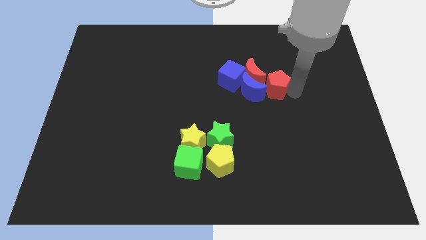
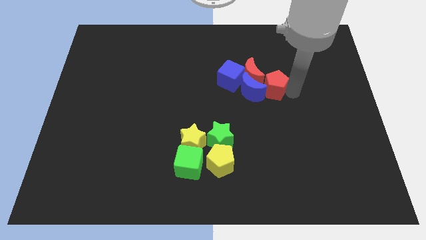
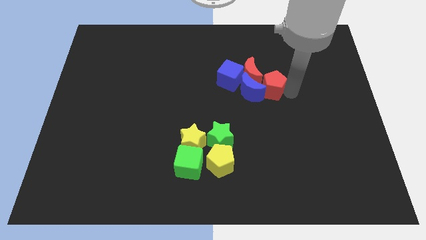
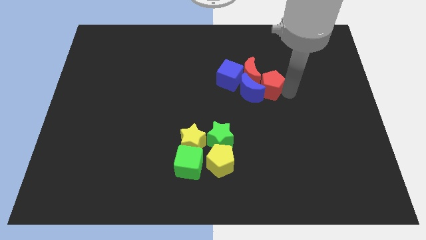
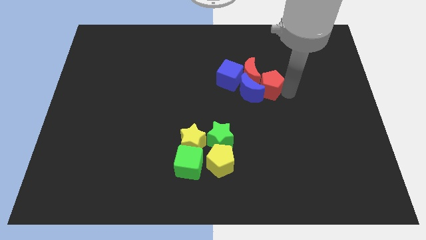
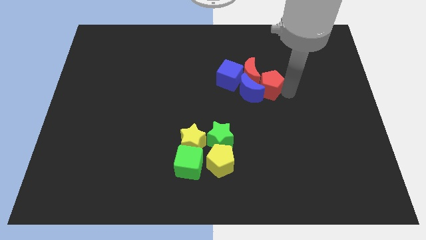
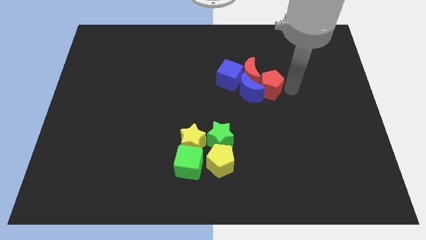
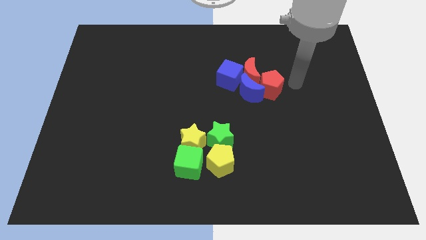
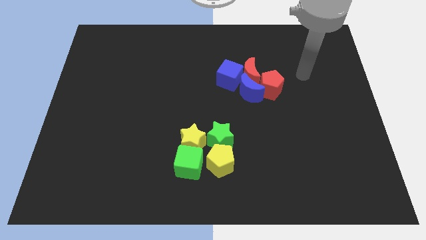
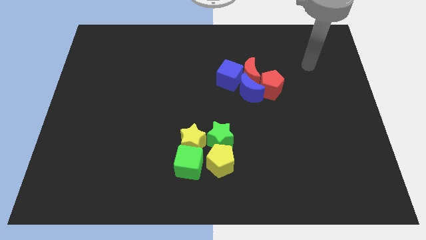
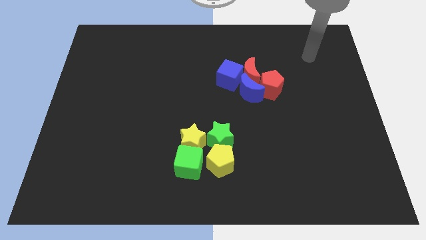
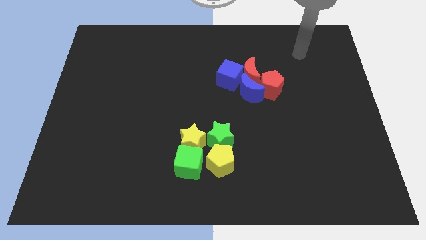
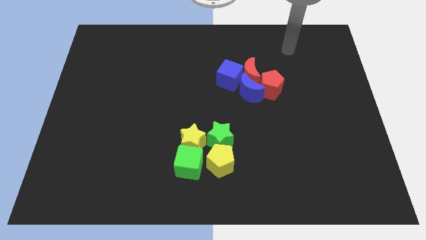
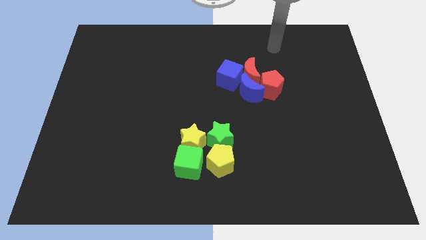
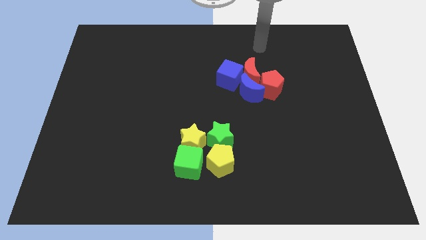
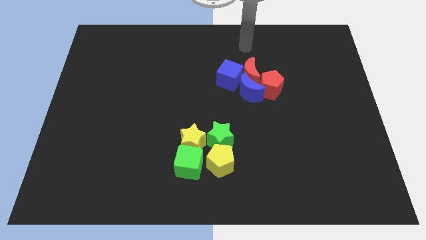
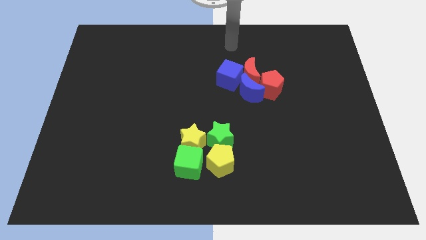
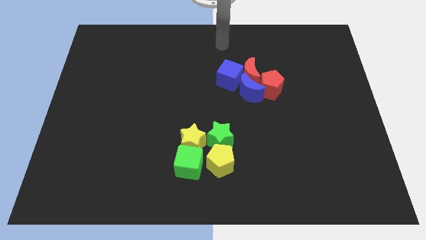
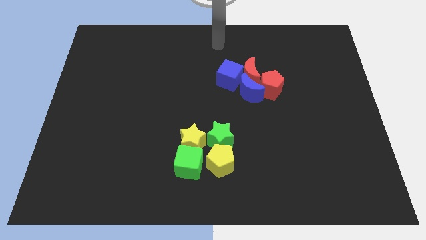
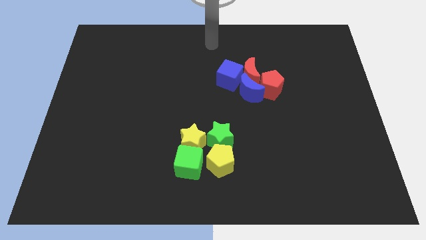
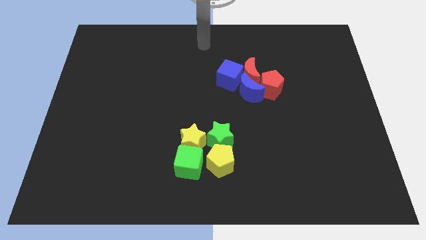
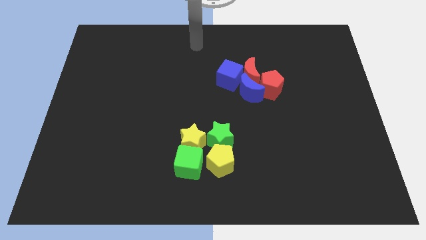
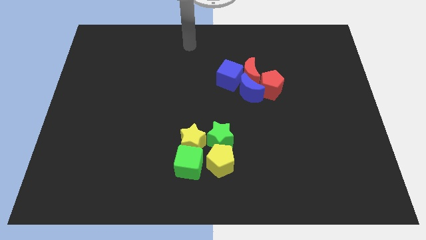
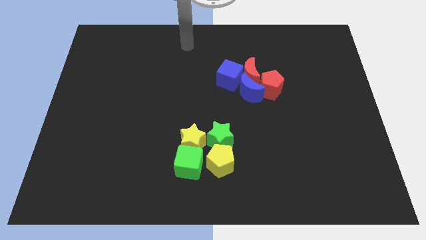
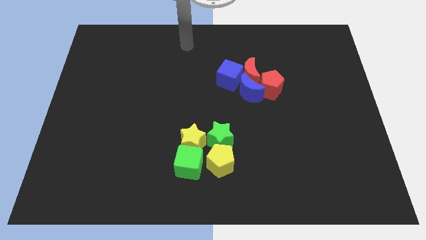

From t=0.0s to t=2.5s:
move your arm to the top center of the board

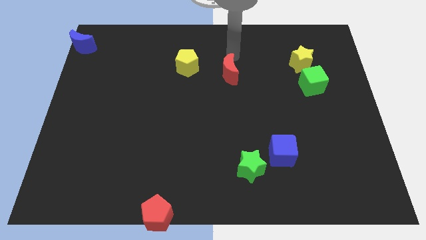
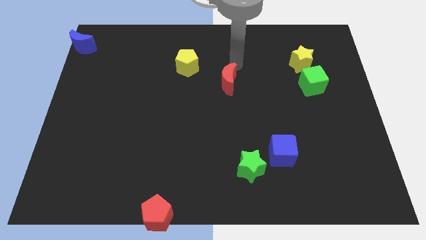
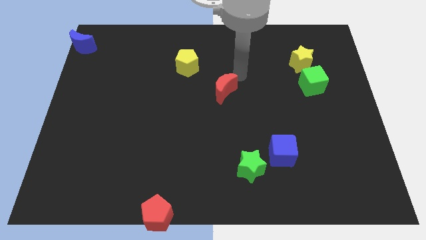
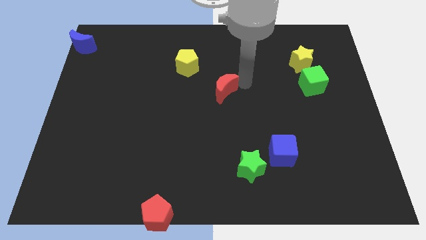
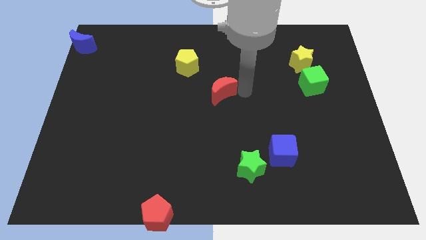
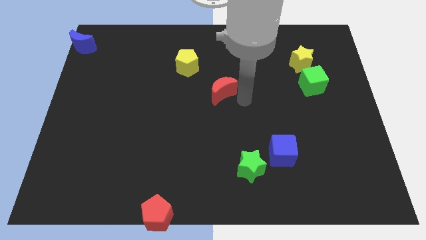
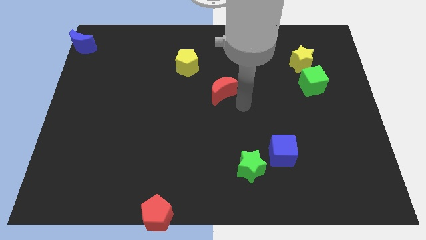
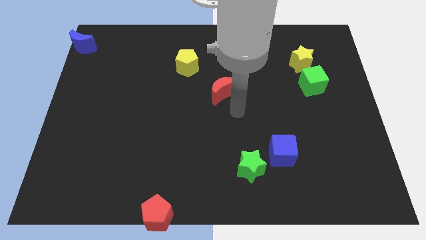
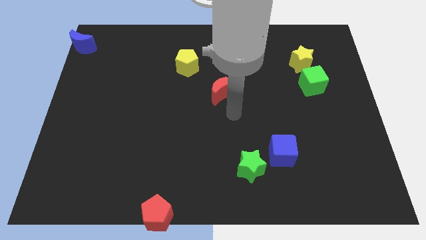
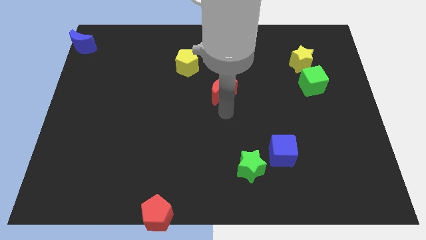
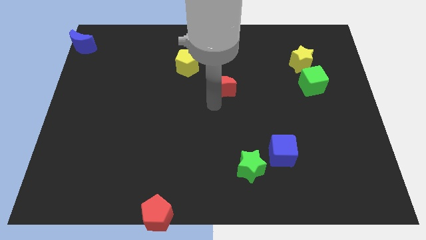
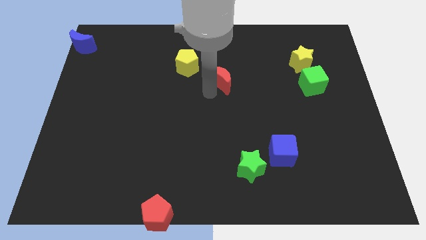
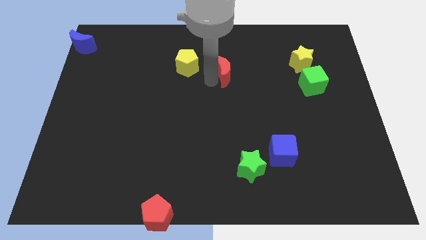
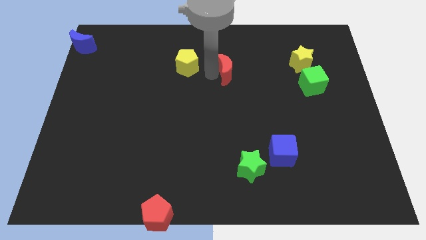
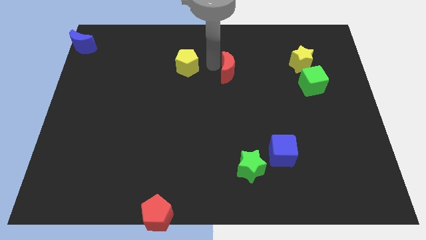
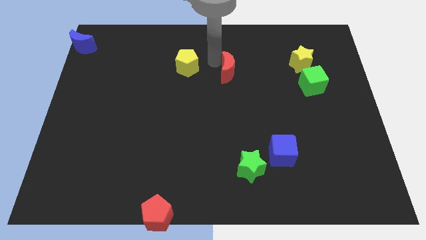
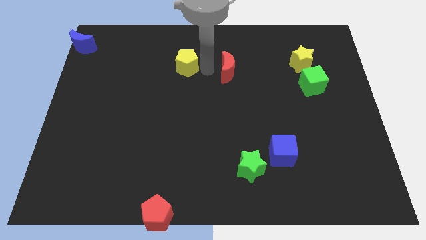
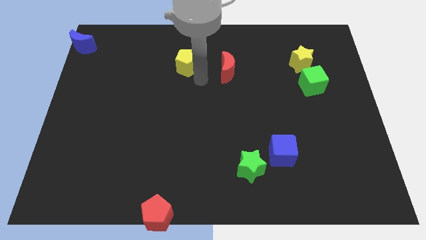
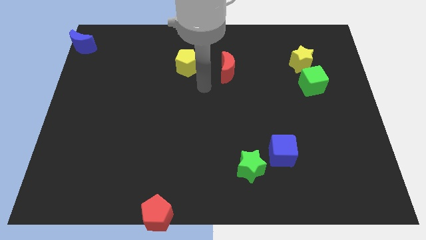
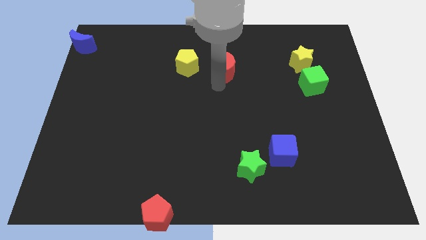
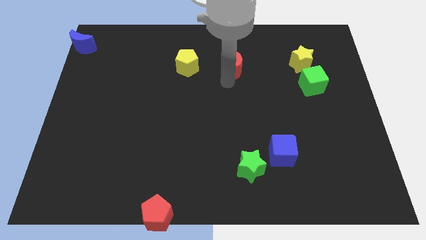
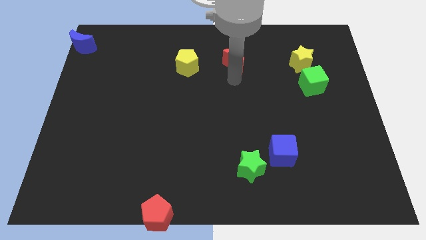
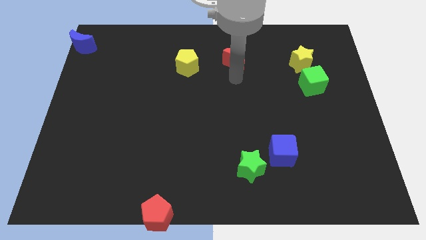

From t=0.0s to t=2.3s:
place the red moon beside the yellow pentagon

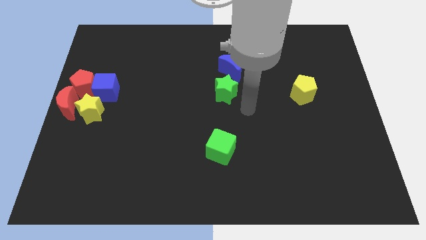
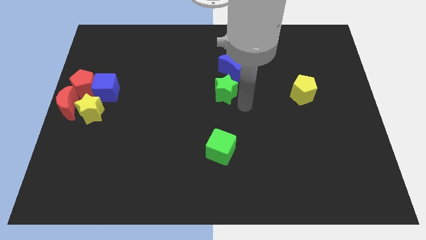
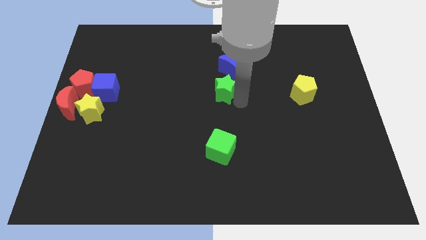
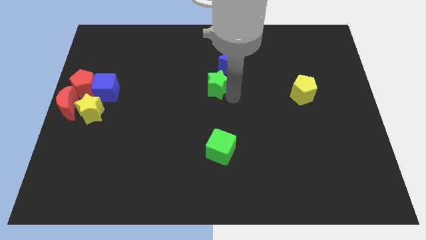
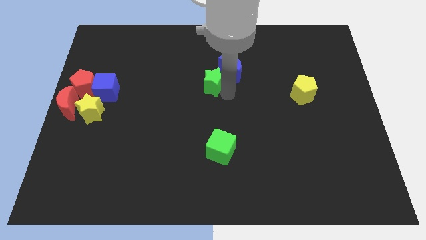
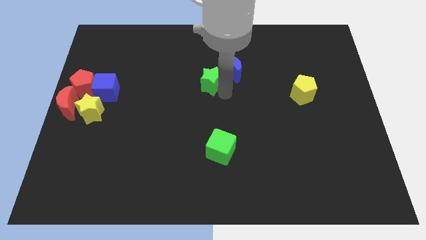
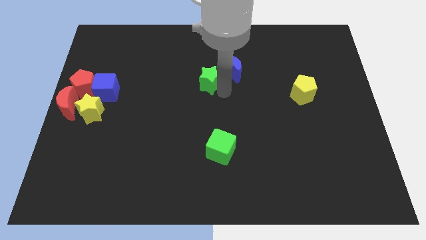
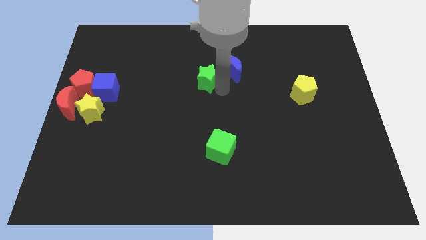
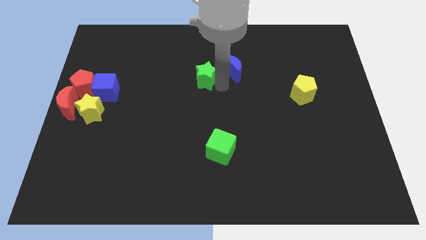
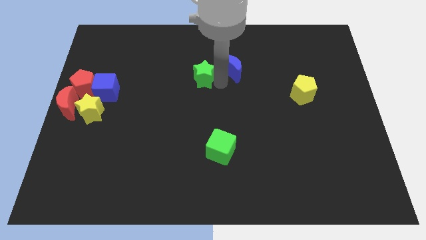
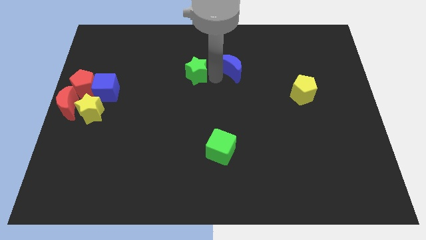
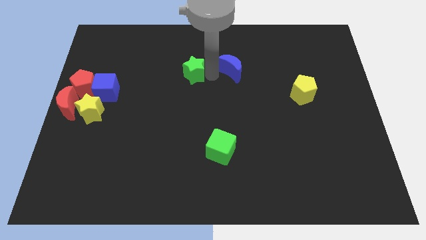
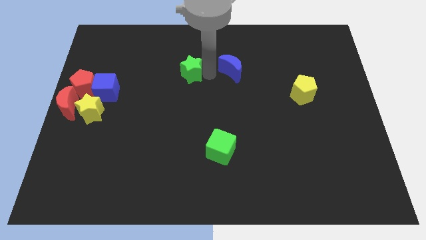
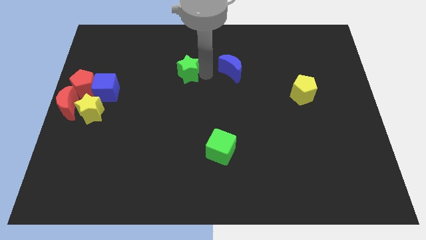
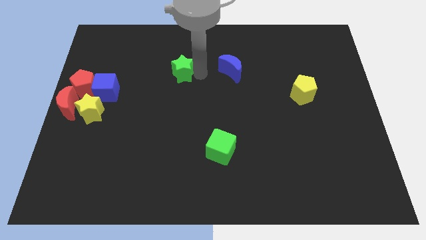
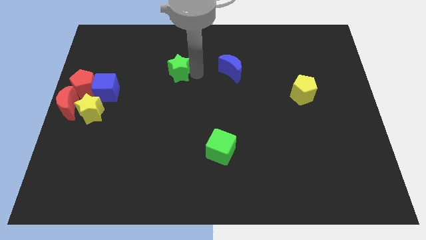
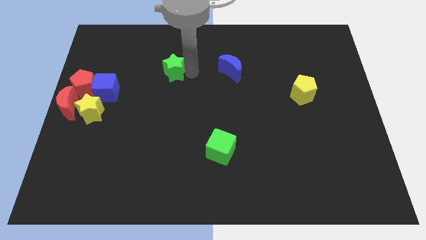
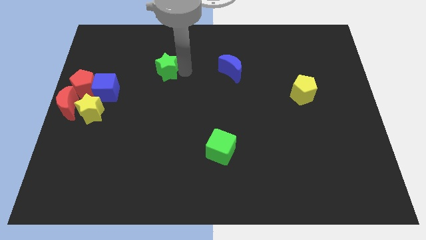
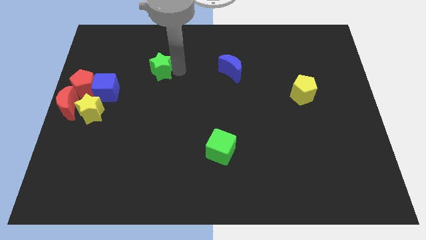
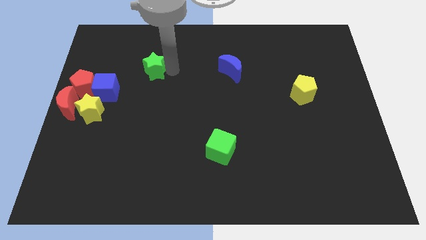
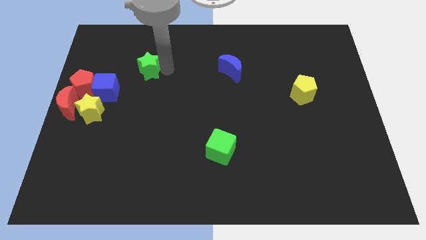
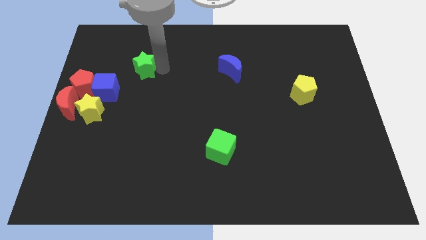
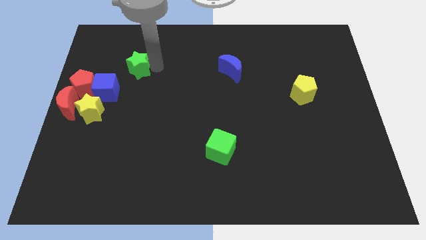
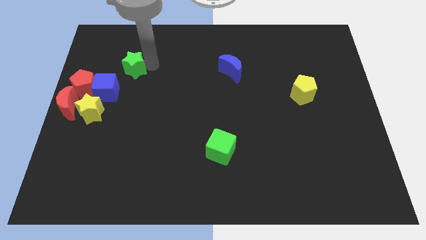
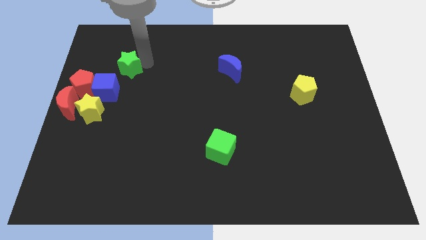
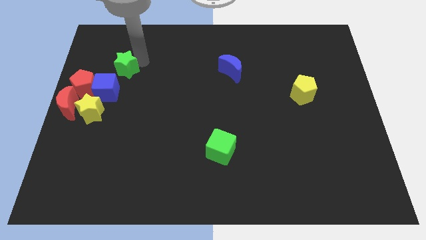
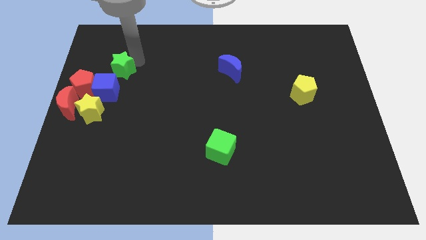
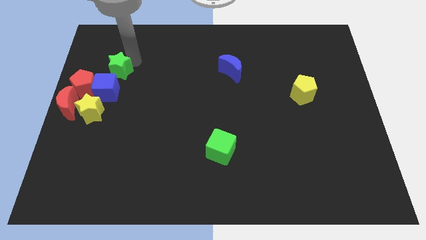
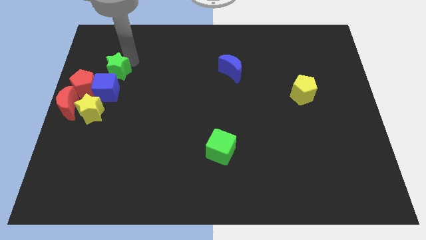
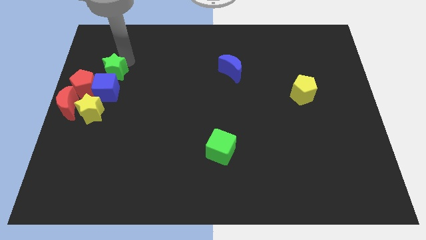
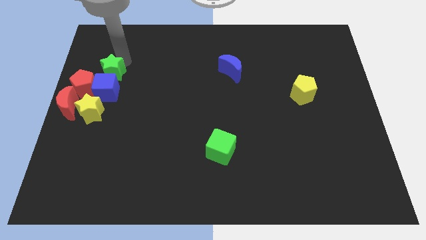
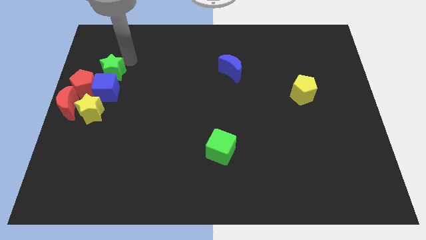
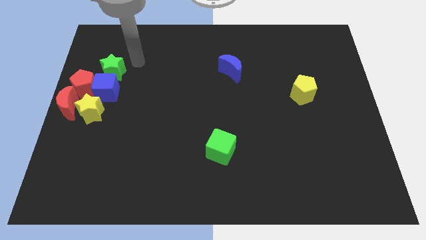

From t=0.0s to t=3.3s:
push the green star above the blue cube

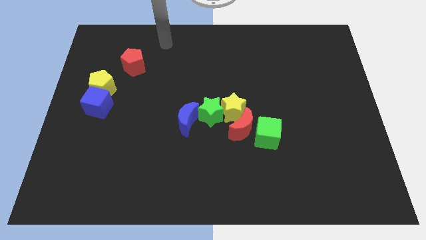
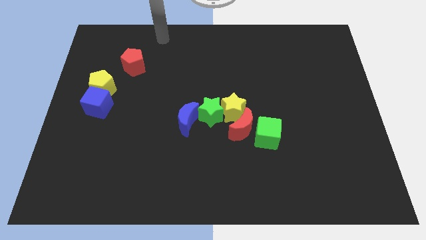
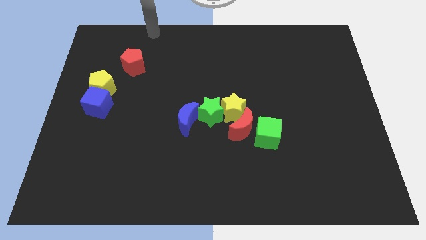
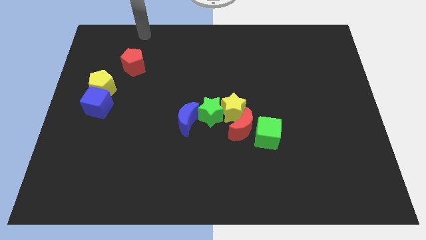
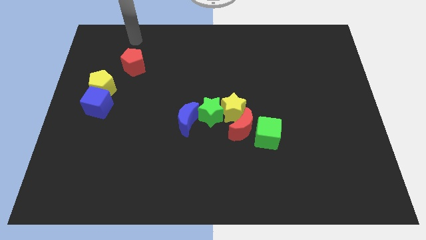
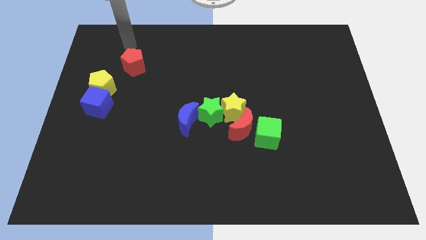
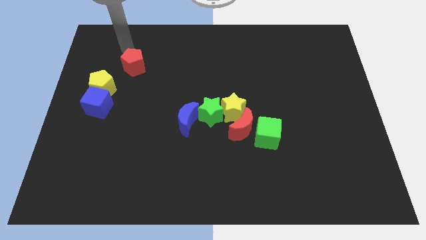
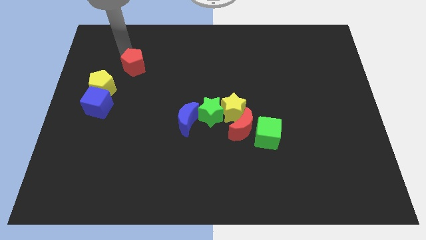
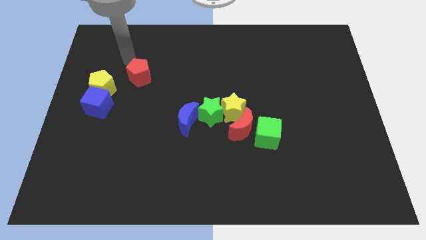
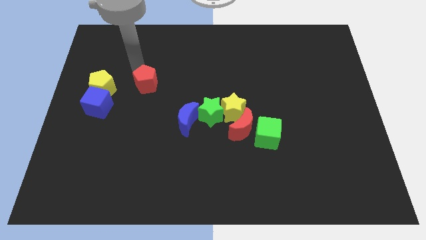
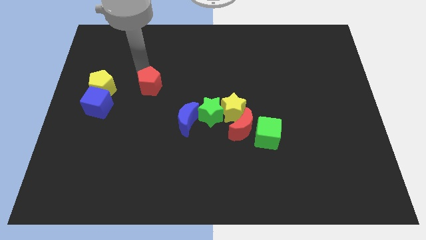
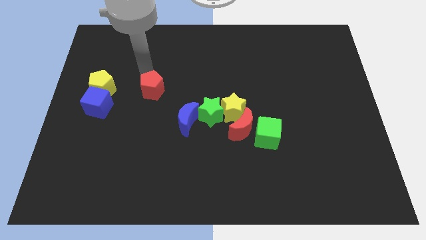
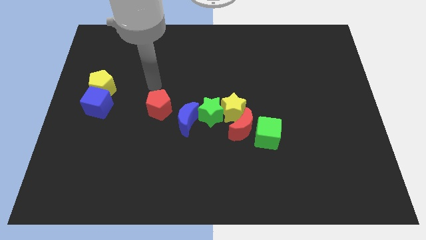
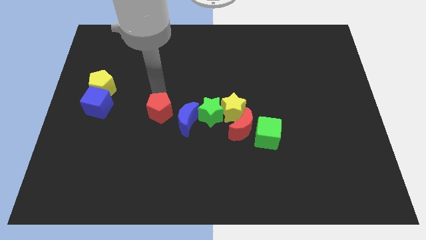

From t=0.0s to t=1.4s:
place the red pentagon in between yellow pentagon and blue crescent
